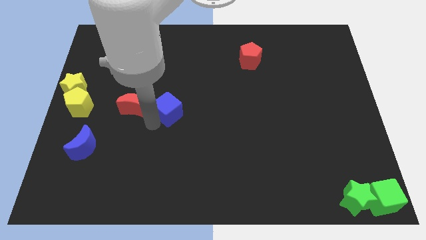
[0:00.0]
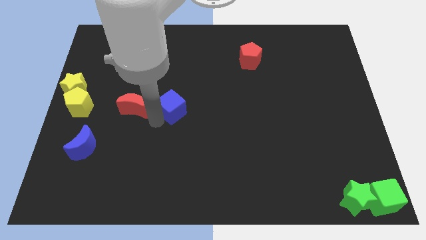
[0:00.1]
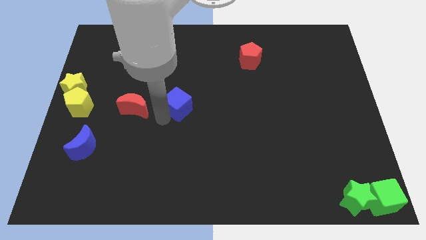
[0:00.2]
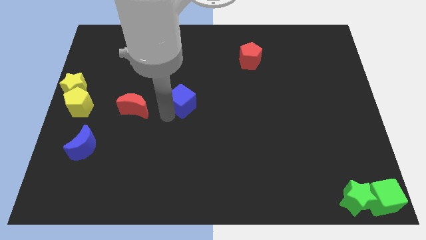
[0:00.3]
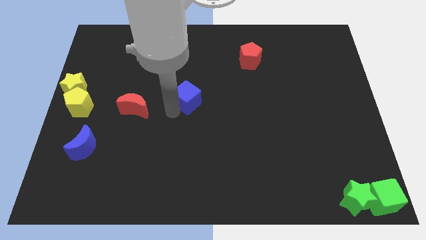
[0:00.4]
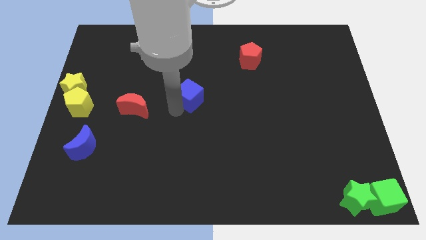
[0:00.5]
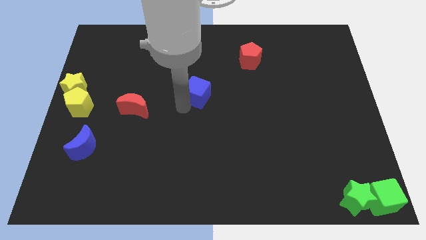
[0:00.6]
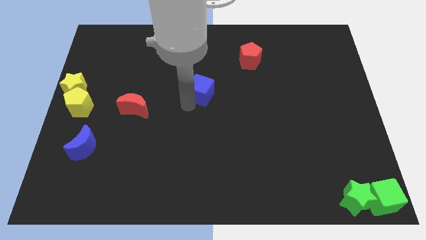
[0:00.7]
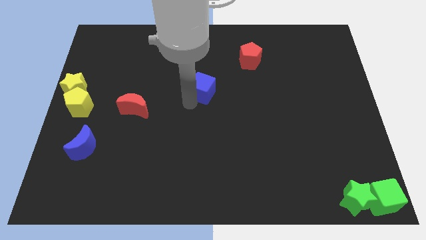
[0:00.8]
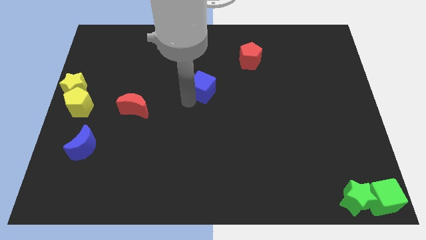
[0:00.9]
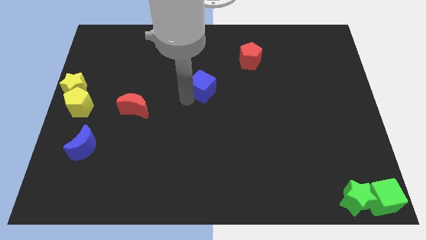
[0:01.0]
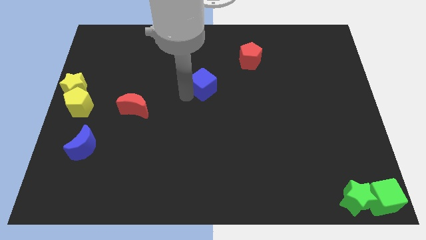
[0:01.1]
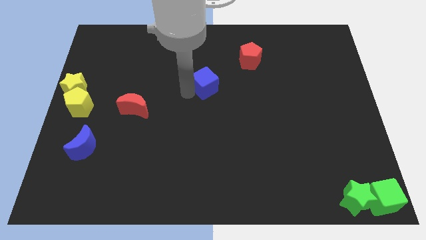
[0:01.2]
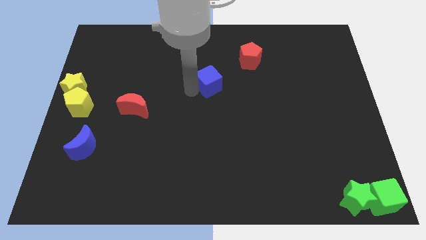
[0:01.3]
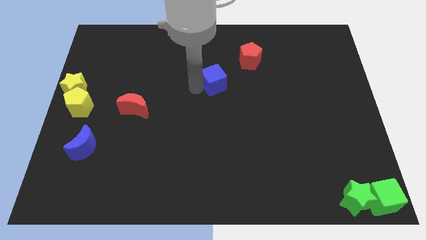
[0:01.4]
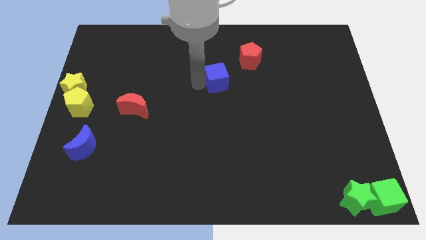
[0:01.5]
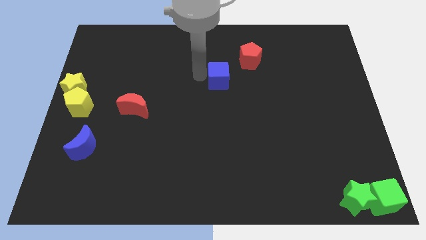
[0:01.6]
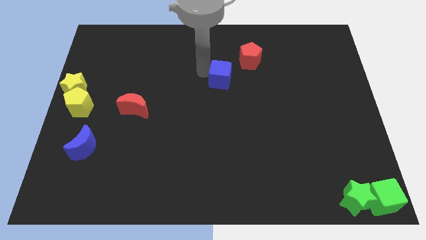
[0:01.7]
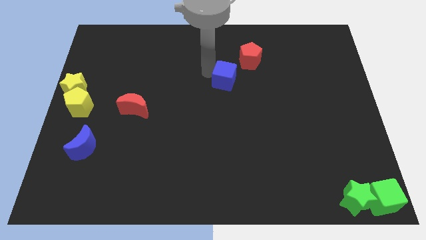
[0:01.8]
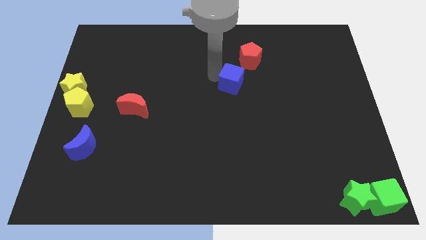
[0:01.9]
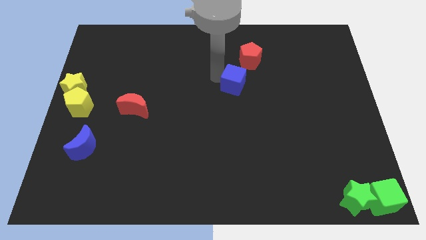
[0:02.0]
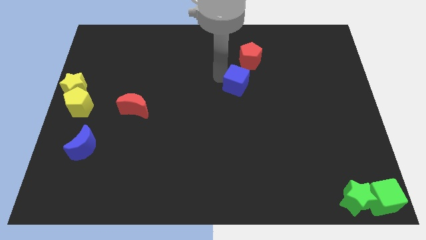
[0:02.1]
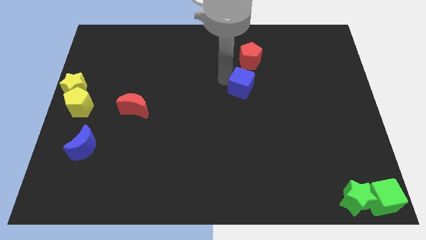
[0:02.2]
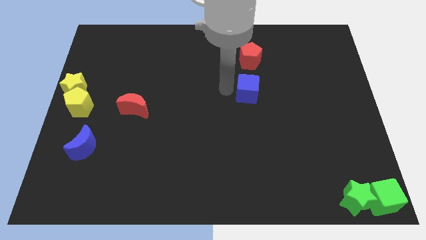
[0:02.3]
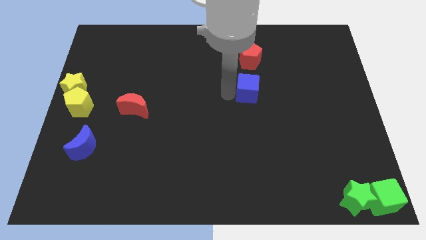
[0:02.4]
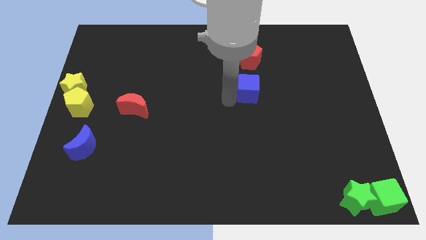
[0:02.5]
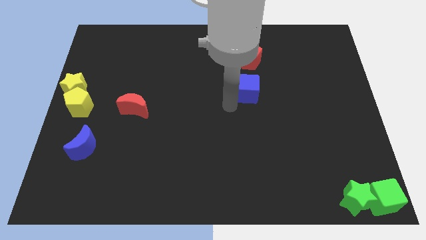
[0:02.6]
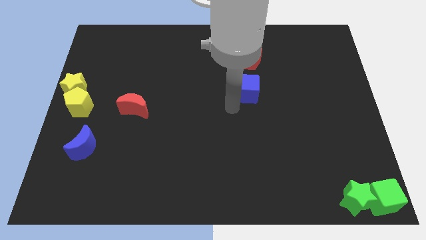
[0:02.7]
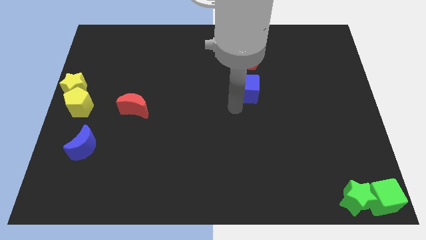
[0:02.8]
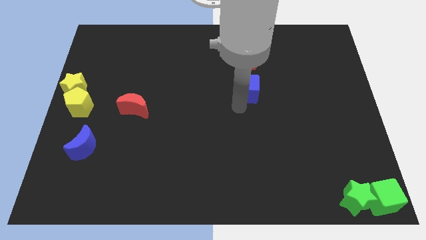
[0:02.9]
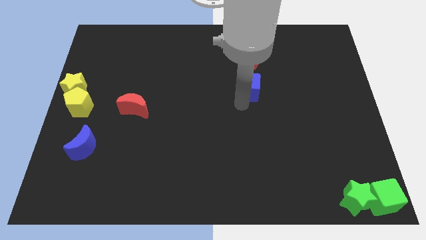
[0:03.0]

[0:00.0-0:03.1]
place the blue cube below the red pentagon

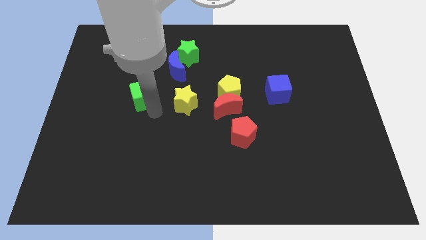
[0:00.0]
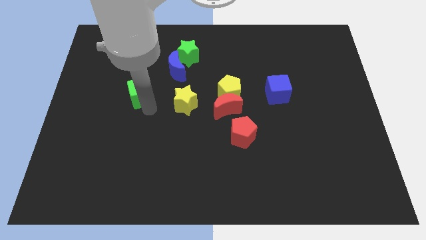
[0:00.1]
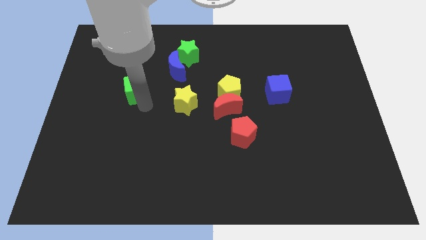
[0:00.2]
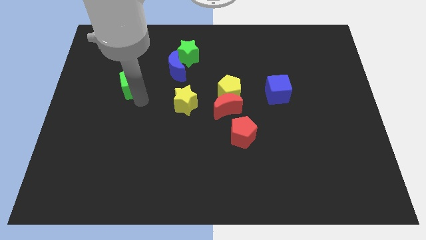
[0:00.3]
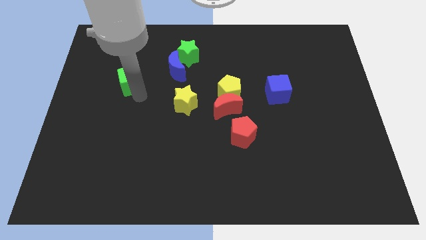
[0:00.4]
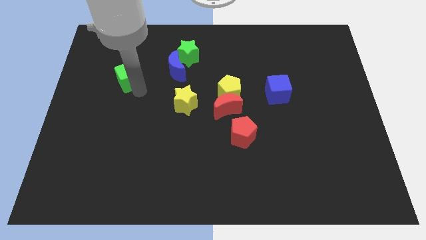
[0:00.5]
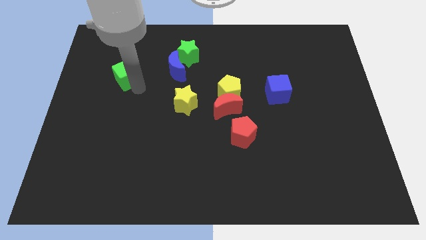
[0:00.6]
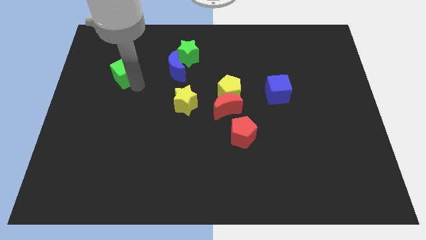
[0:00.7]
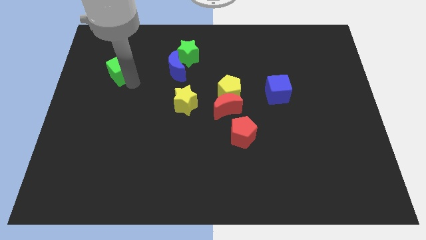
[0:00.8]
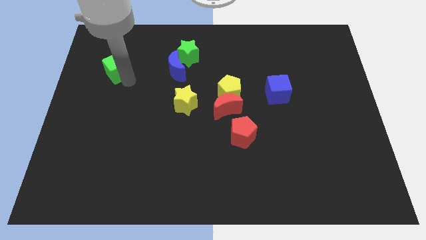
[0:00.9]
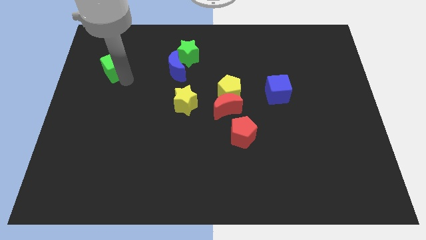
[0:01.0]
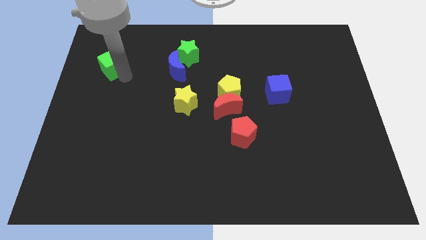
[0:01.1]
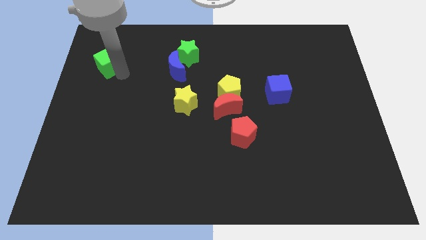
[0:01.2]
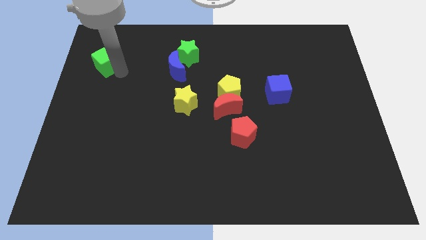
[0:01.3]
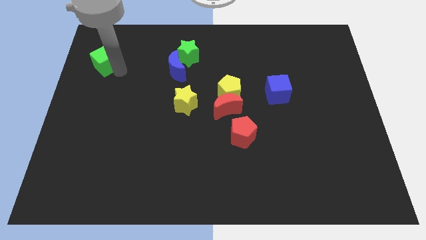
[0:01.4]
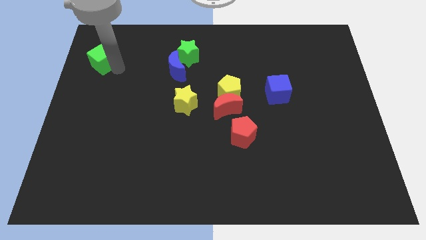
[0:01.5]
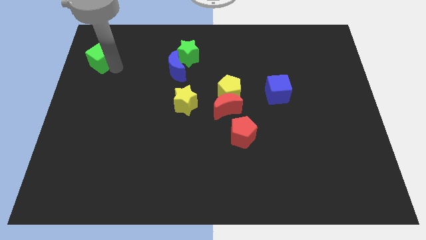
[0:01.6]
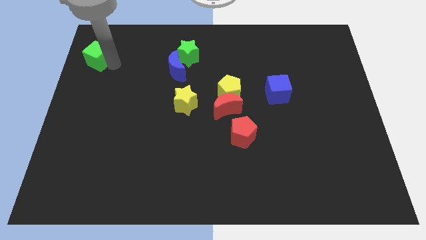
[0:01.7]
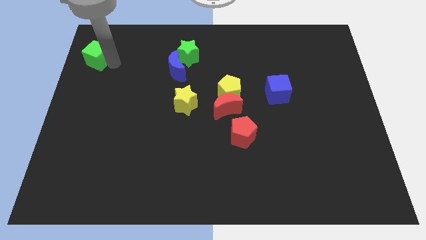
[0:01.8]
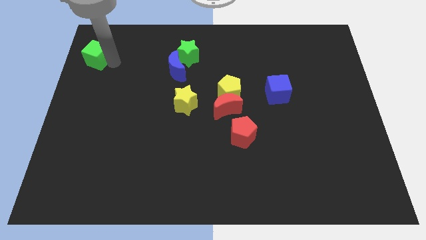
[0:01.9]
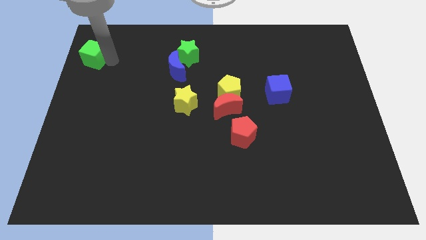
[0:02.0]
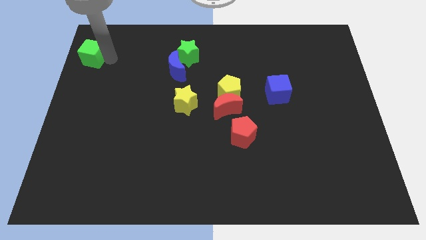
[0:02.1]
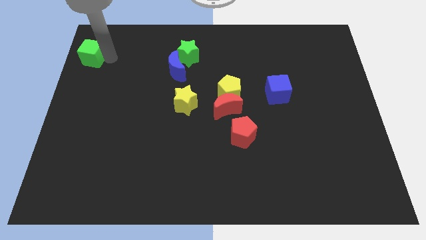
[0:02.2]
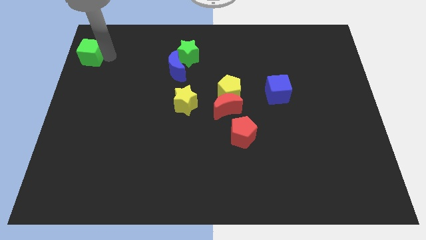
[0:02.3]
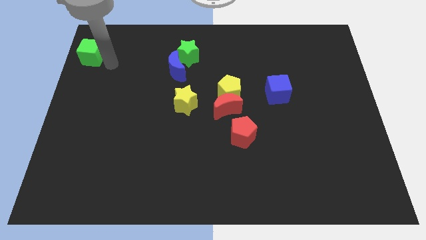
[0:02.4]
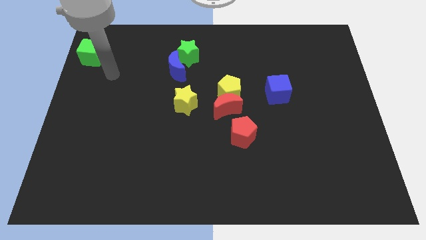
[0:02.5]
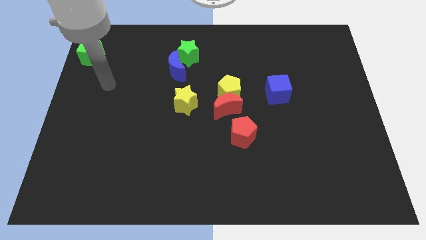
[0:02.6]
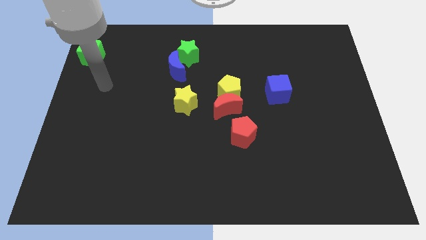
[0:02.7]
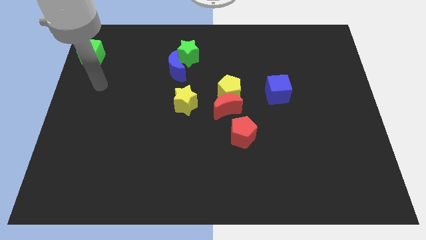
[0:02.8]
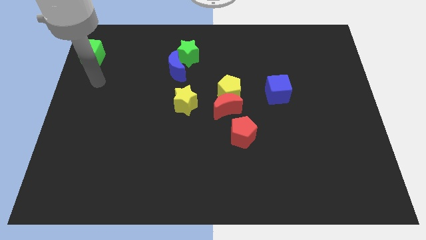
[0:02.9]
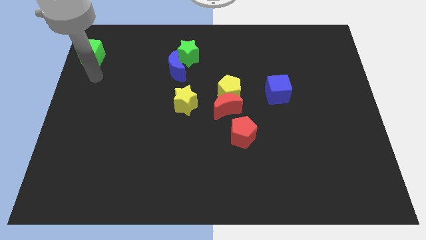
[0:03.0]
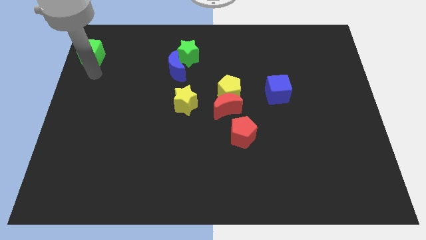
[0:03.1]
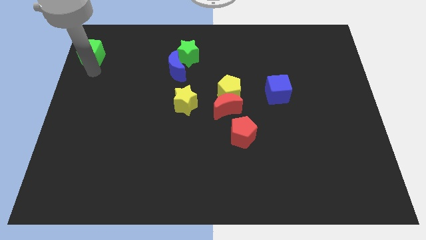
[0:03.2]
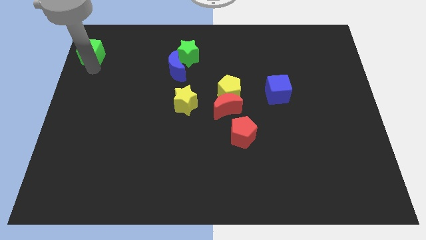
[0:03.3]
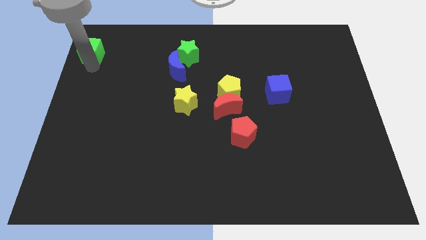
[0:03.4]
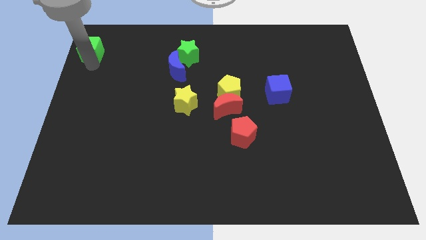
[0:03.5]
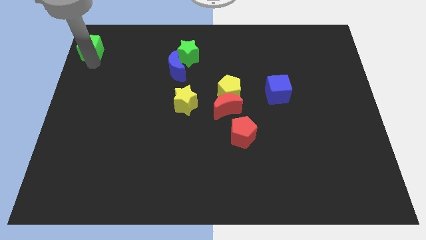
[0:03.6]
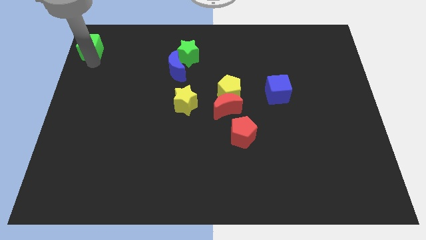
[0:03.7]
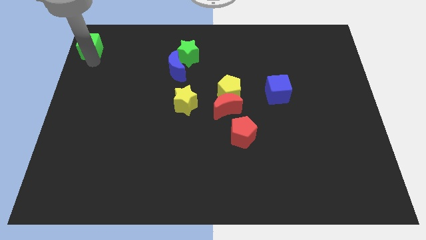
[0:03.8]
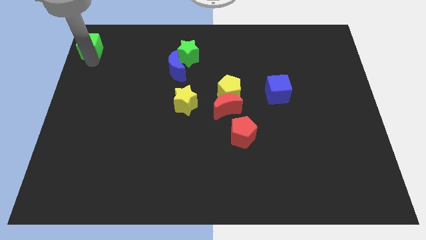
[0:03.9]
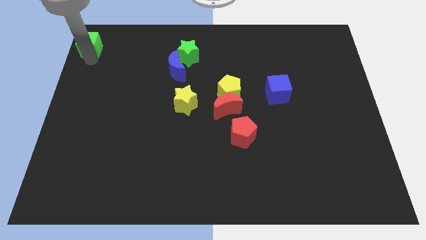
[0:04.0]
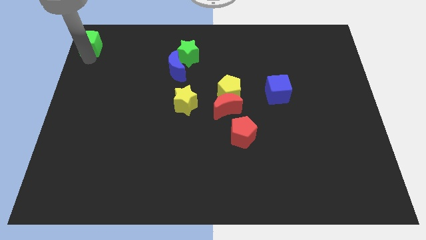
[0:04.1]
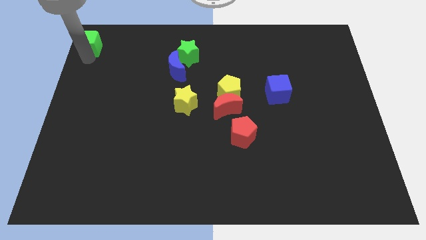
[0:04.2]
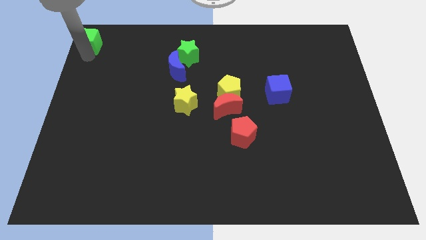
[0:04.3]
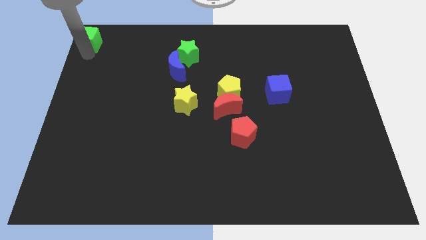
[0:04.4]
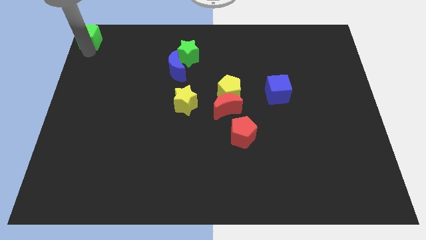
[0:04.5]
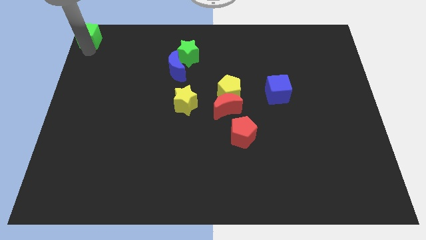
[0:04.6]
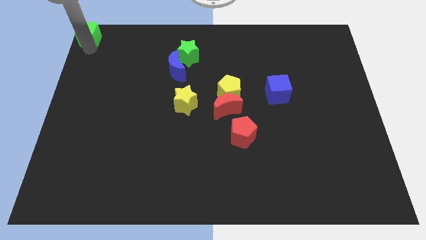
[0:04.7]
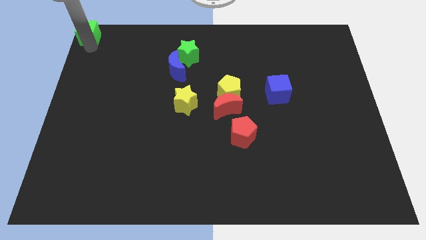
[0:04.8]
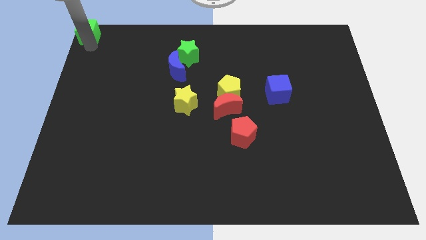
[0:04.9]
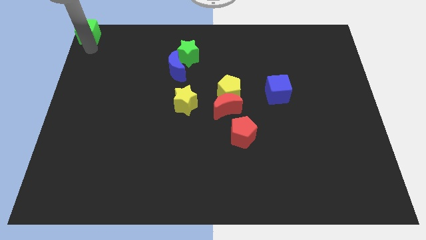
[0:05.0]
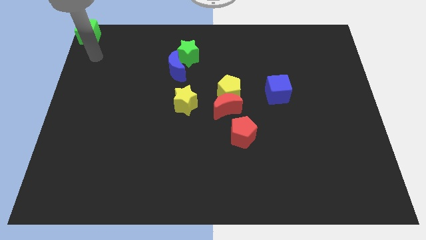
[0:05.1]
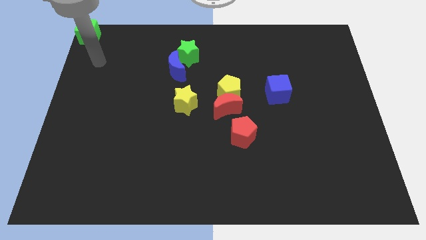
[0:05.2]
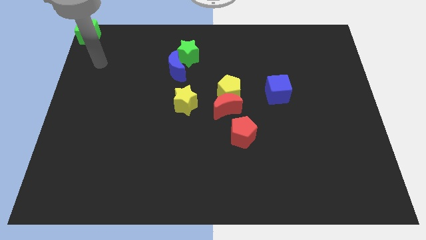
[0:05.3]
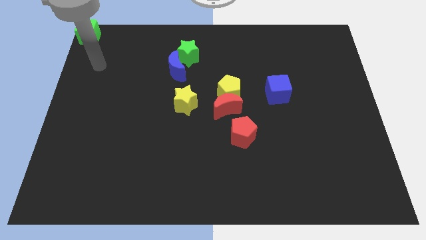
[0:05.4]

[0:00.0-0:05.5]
push green cube to the top left corner of the board

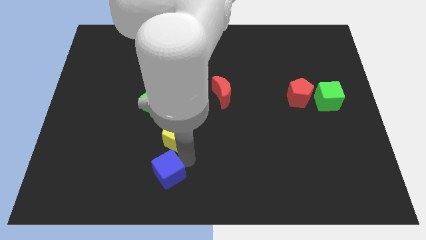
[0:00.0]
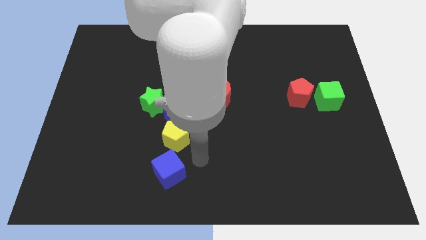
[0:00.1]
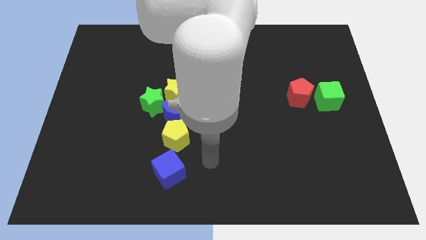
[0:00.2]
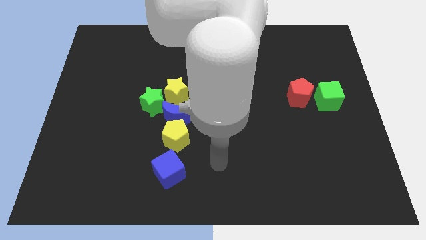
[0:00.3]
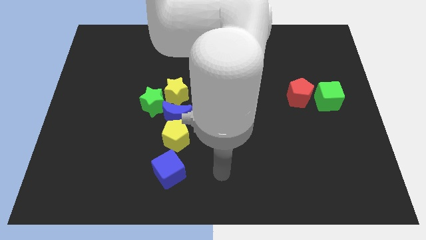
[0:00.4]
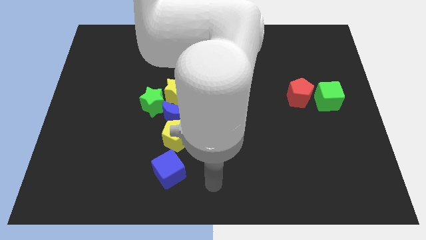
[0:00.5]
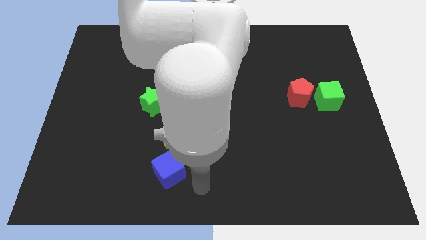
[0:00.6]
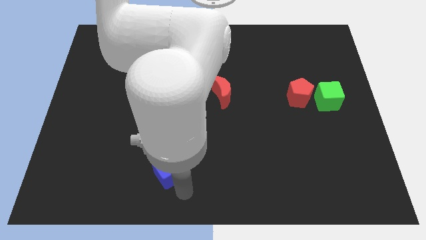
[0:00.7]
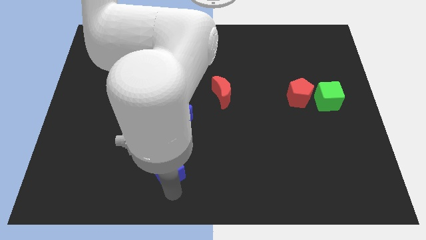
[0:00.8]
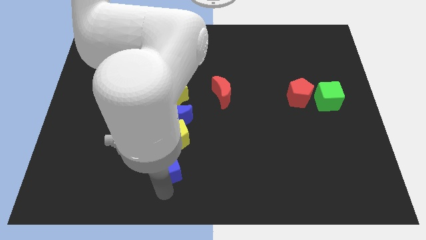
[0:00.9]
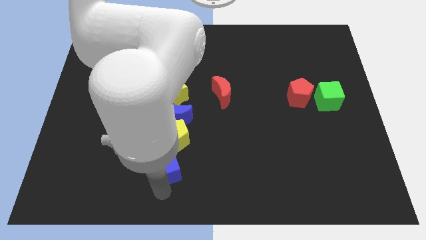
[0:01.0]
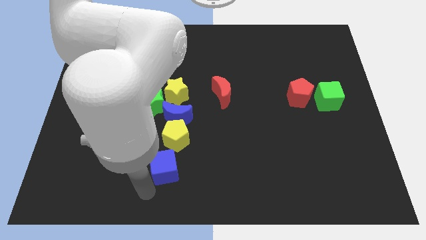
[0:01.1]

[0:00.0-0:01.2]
touch the bottom of blue cube
